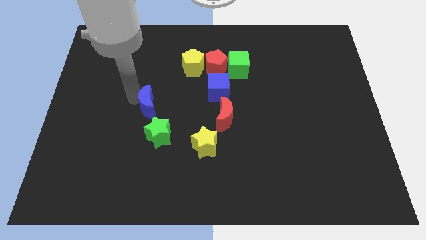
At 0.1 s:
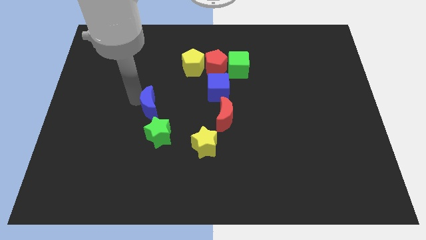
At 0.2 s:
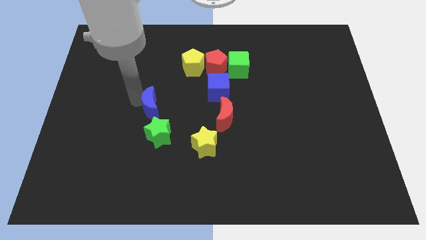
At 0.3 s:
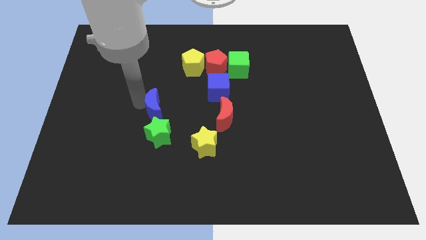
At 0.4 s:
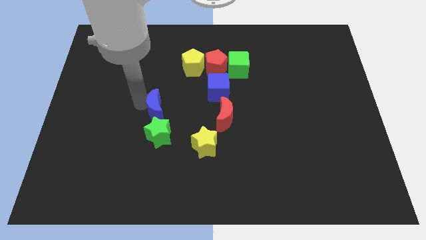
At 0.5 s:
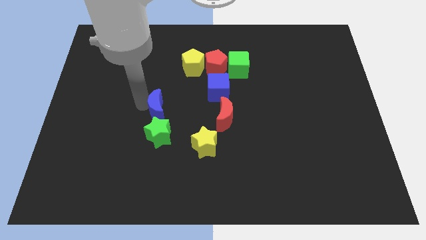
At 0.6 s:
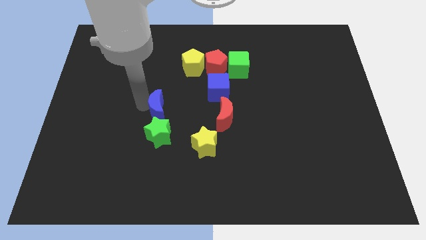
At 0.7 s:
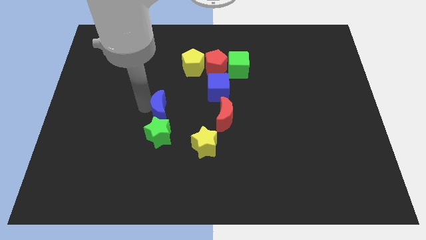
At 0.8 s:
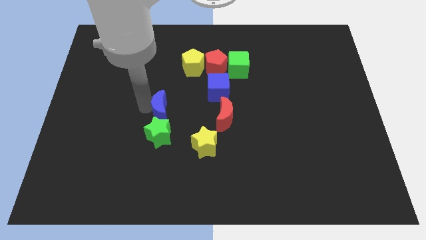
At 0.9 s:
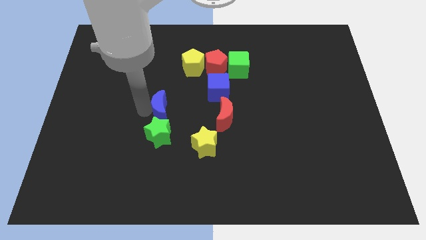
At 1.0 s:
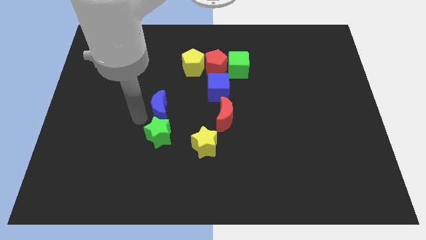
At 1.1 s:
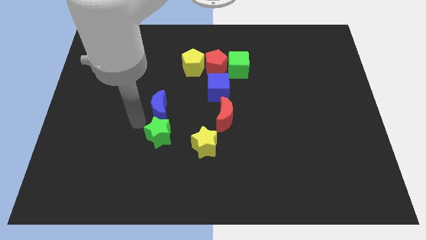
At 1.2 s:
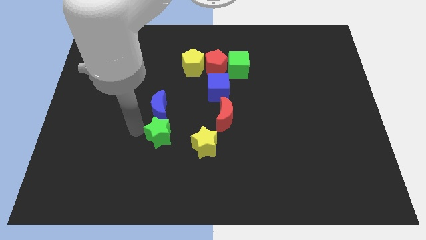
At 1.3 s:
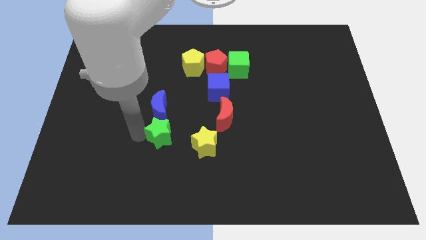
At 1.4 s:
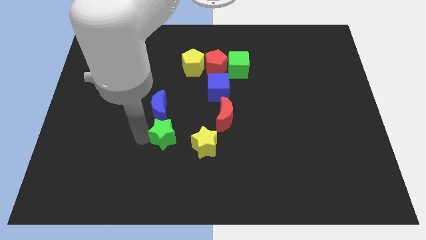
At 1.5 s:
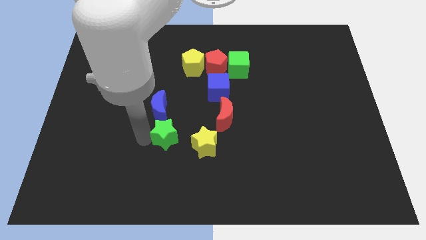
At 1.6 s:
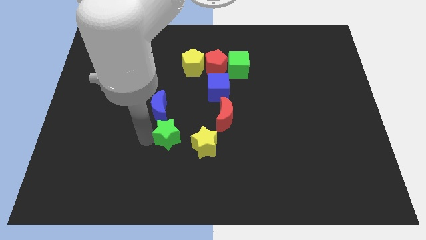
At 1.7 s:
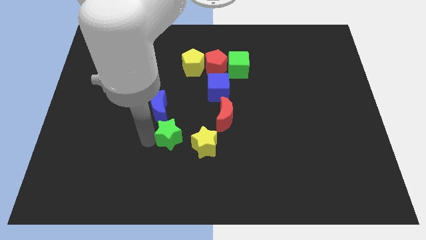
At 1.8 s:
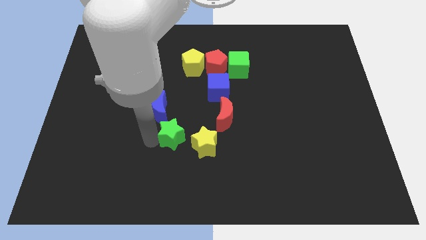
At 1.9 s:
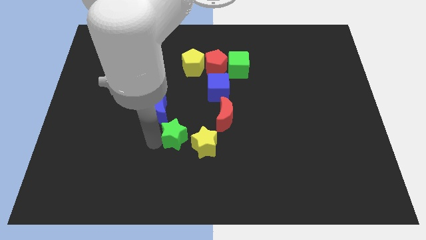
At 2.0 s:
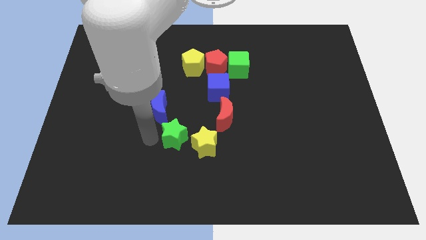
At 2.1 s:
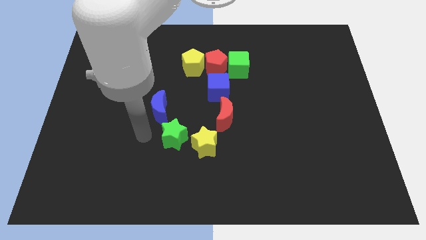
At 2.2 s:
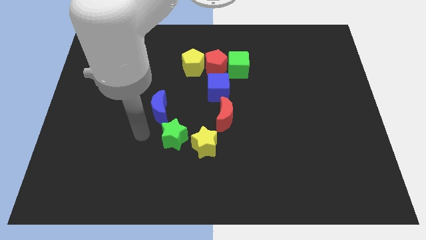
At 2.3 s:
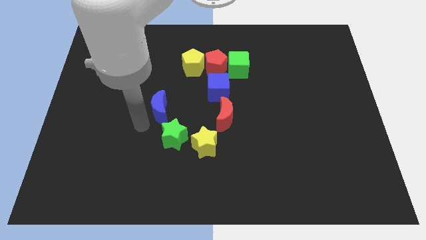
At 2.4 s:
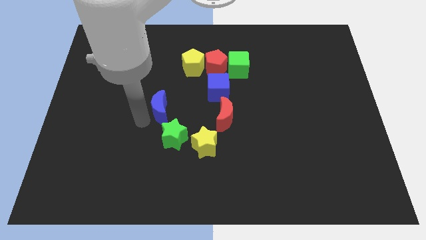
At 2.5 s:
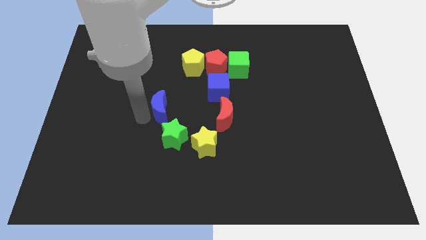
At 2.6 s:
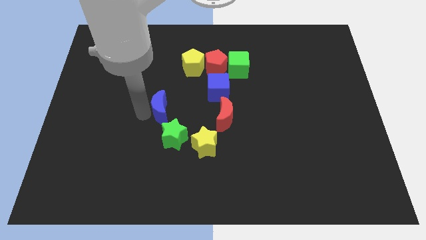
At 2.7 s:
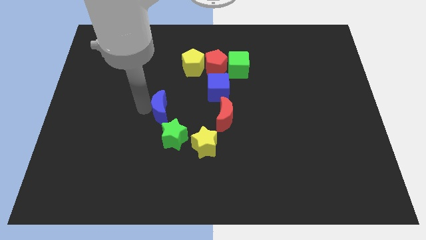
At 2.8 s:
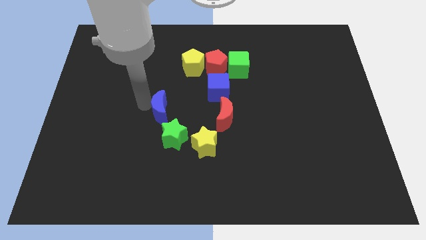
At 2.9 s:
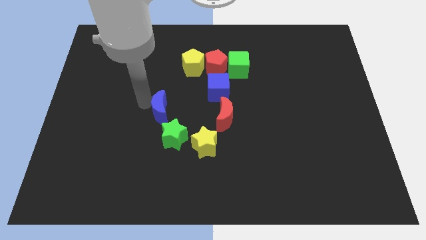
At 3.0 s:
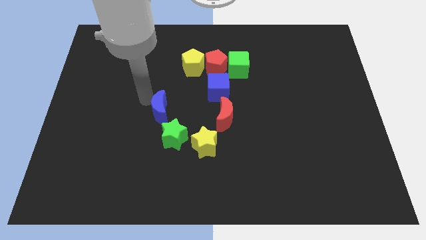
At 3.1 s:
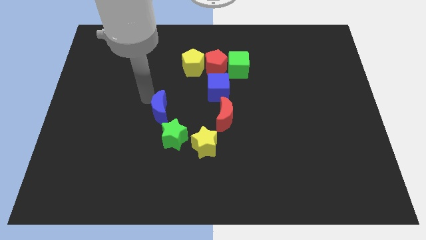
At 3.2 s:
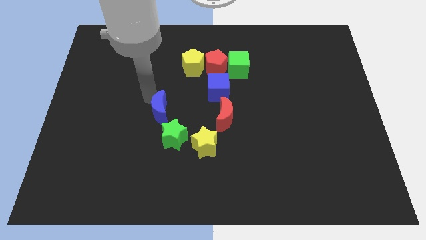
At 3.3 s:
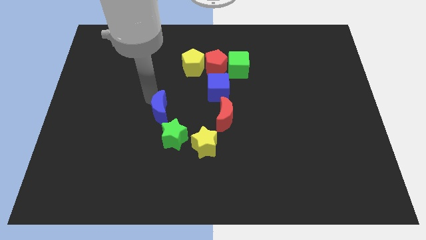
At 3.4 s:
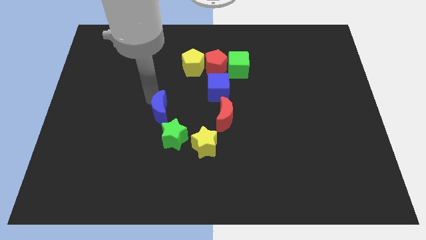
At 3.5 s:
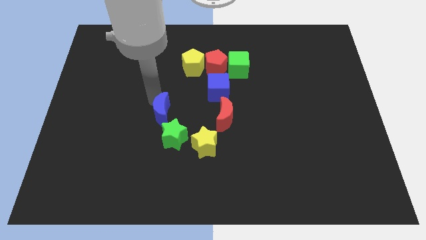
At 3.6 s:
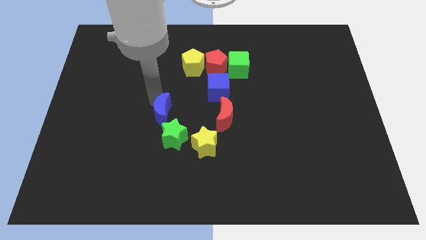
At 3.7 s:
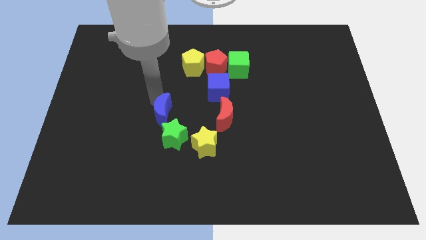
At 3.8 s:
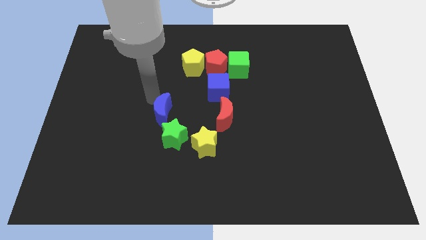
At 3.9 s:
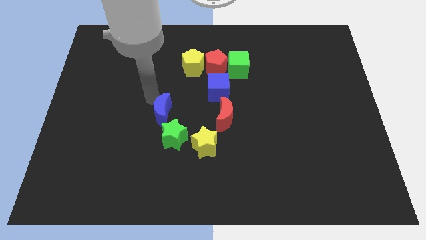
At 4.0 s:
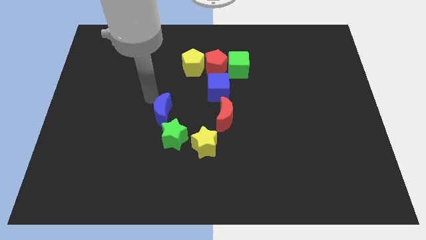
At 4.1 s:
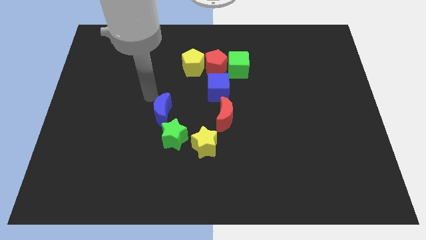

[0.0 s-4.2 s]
place the green star in between the yellow star and the blue moon

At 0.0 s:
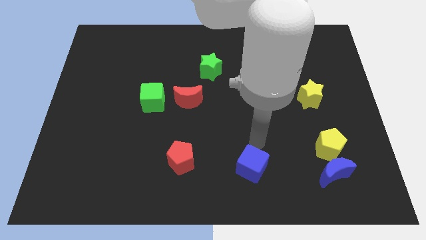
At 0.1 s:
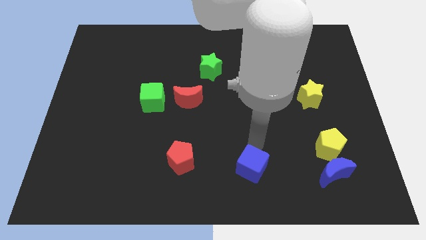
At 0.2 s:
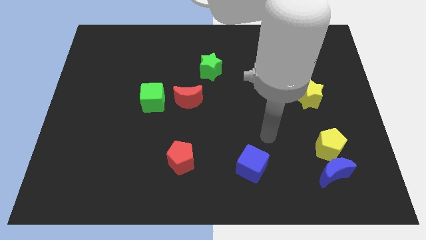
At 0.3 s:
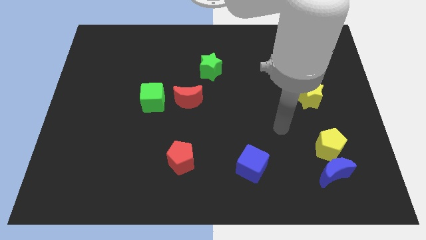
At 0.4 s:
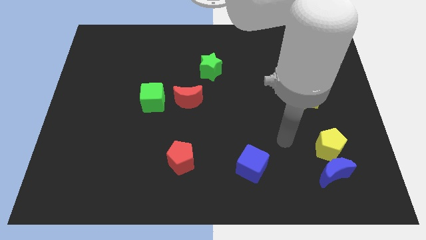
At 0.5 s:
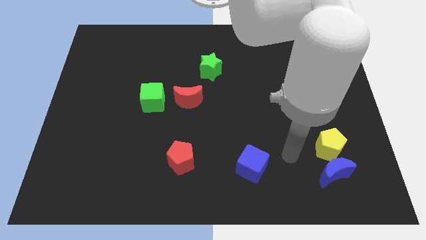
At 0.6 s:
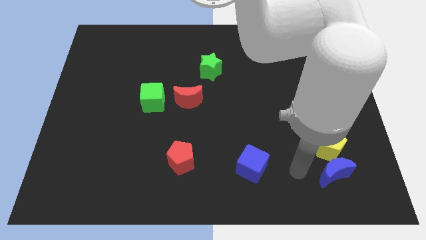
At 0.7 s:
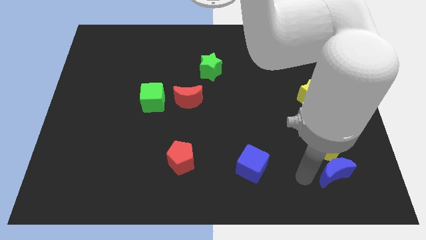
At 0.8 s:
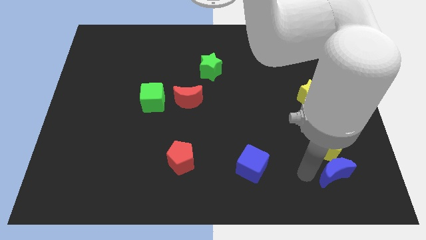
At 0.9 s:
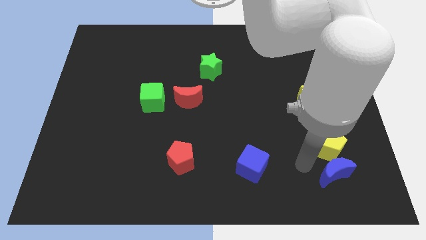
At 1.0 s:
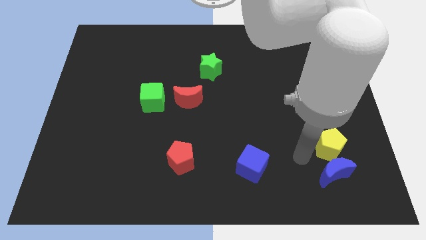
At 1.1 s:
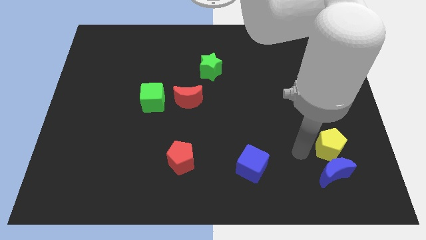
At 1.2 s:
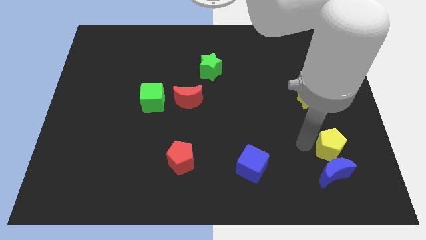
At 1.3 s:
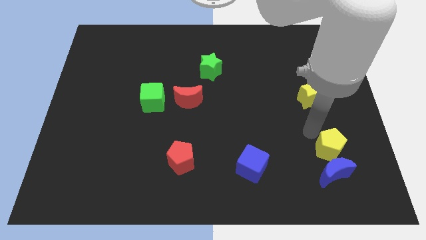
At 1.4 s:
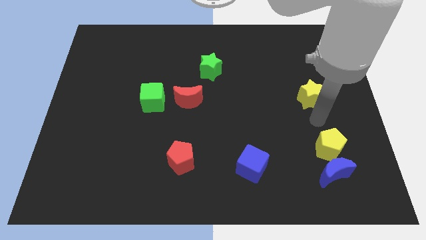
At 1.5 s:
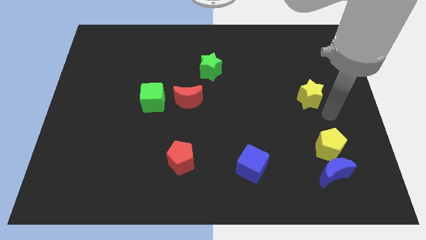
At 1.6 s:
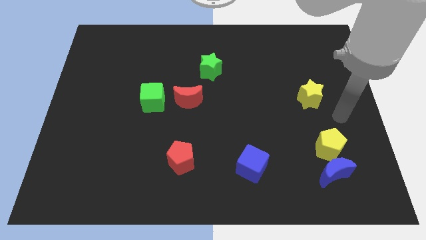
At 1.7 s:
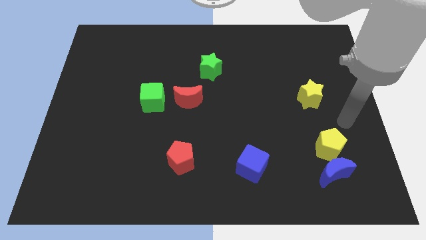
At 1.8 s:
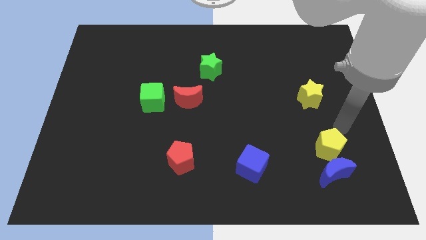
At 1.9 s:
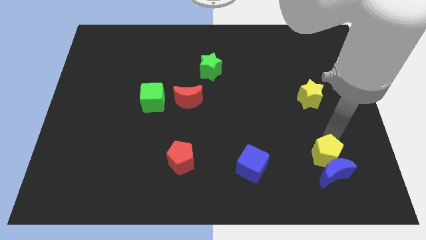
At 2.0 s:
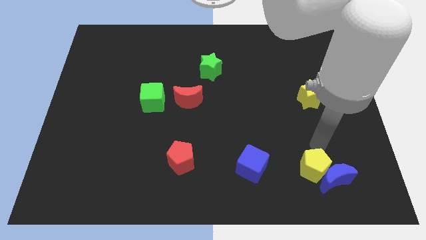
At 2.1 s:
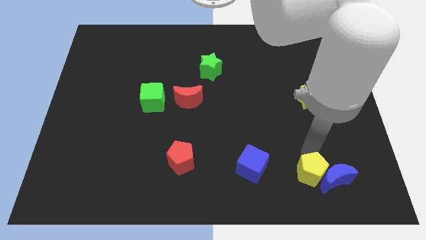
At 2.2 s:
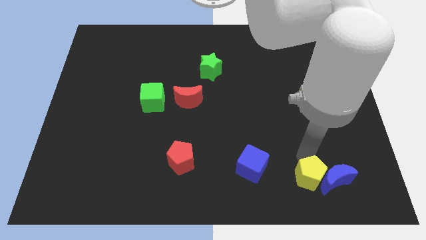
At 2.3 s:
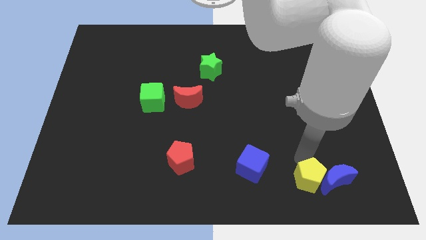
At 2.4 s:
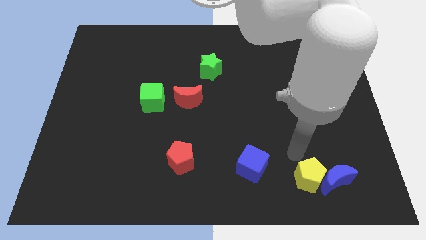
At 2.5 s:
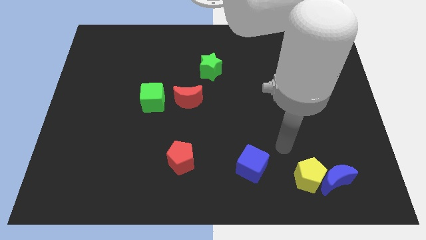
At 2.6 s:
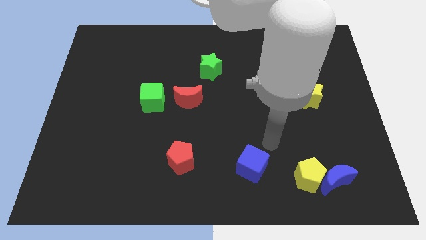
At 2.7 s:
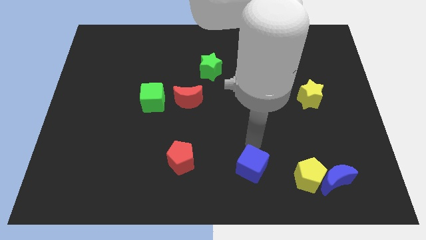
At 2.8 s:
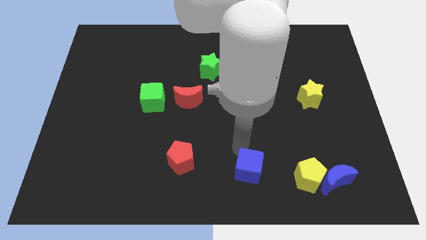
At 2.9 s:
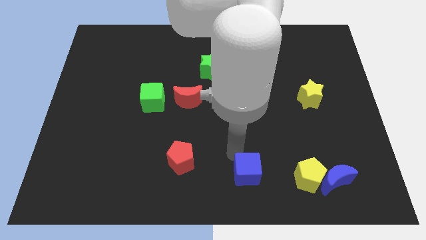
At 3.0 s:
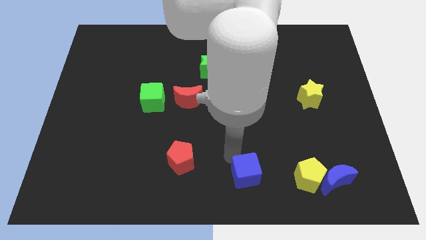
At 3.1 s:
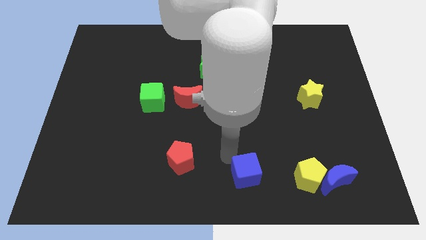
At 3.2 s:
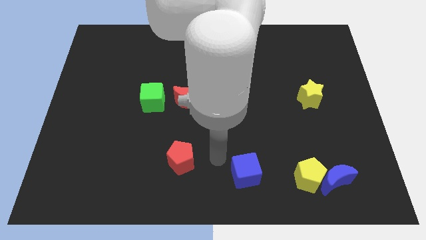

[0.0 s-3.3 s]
slightly move down the yellow pentagon

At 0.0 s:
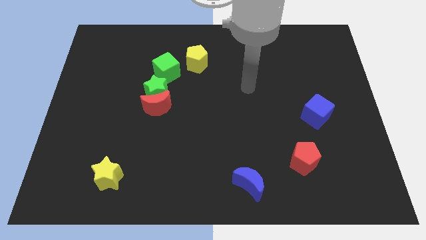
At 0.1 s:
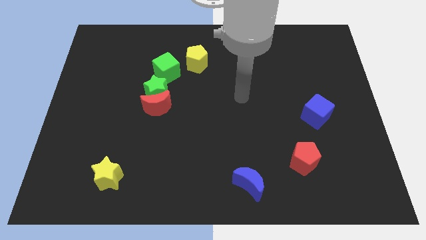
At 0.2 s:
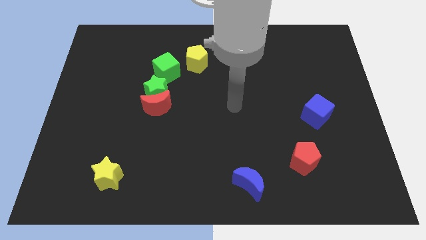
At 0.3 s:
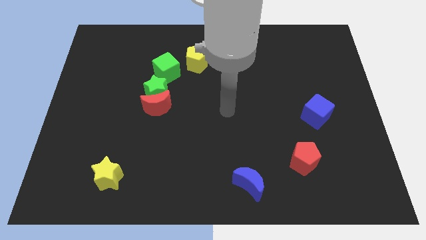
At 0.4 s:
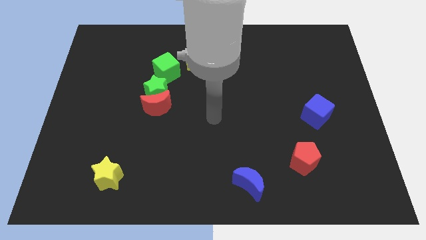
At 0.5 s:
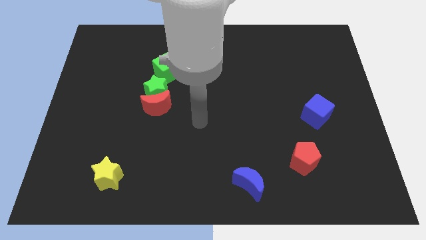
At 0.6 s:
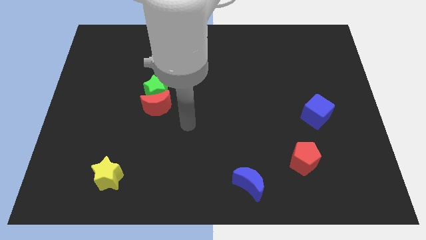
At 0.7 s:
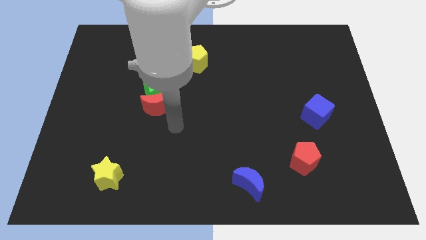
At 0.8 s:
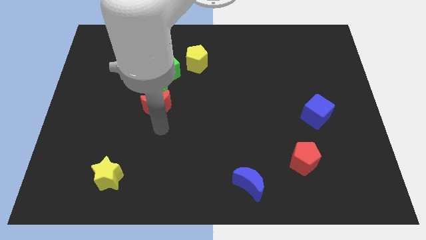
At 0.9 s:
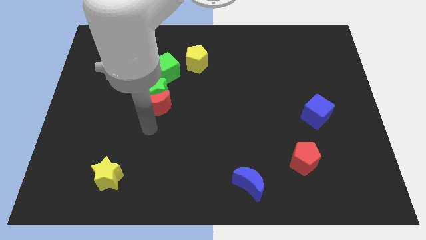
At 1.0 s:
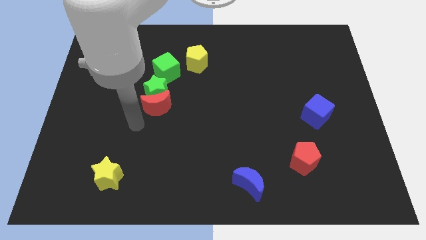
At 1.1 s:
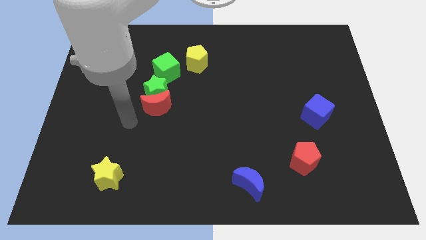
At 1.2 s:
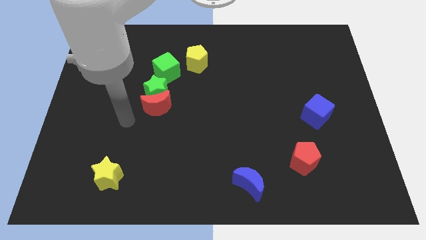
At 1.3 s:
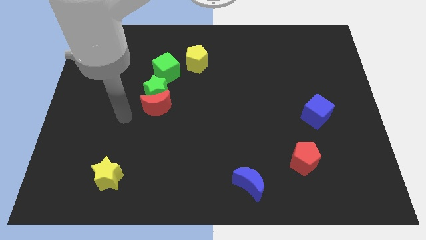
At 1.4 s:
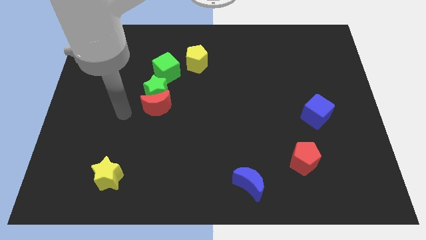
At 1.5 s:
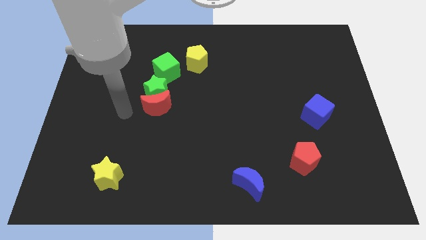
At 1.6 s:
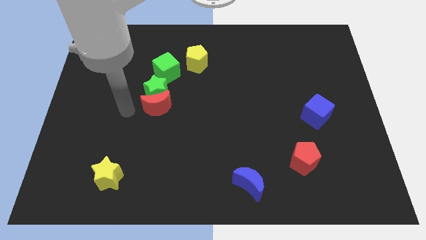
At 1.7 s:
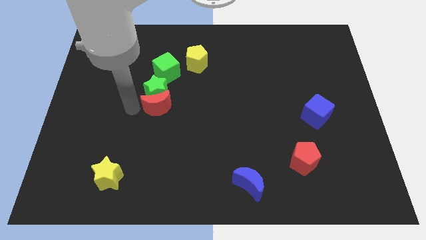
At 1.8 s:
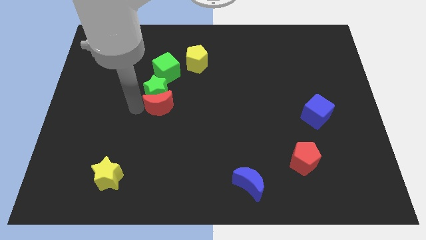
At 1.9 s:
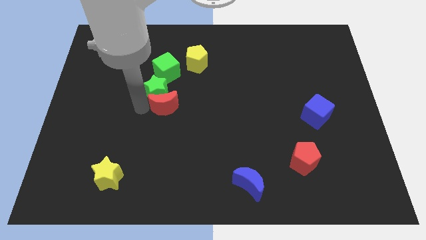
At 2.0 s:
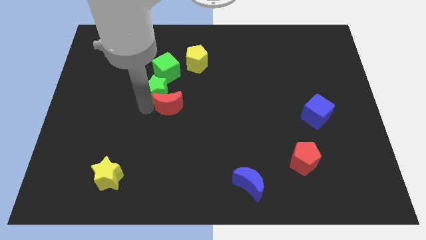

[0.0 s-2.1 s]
slide the red moon diagonally to the yellow star
